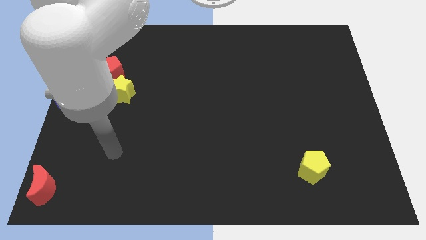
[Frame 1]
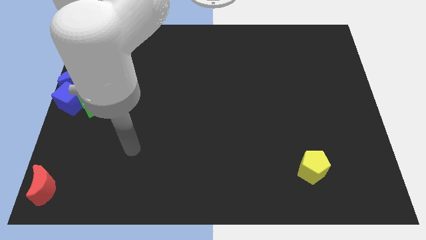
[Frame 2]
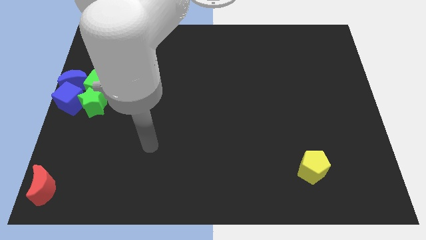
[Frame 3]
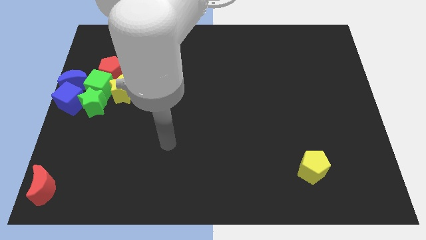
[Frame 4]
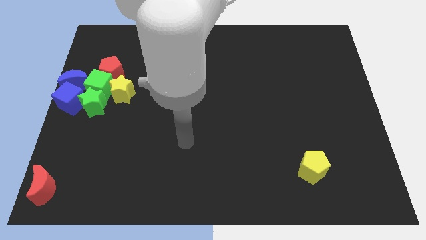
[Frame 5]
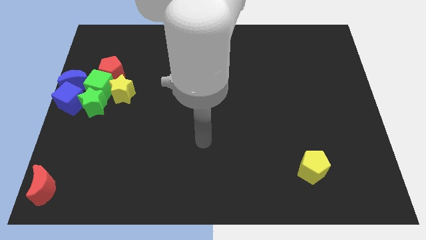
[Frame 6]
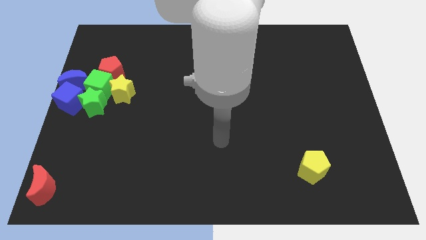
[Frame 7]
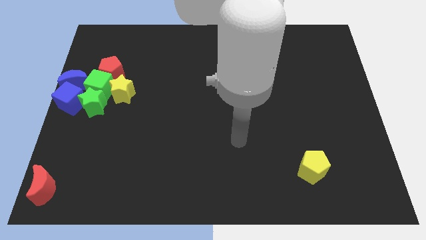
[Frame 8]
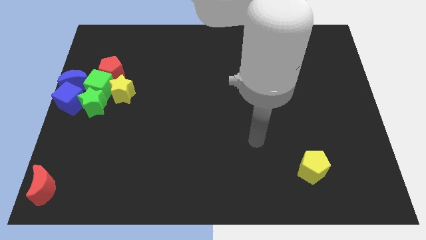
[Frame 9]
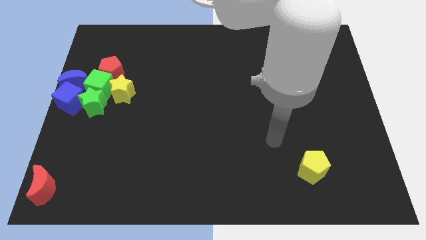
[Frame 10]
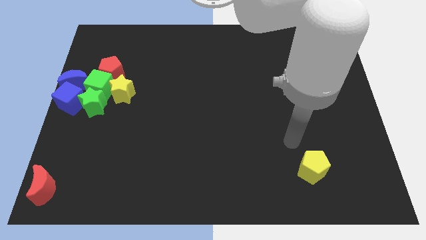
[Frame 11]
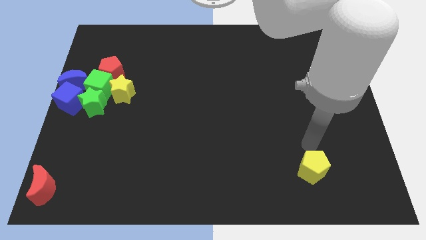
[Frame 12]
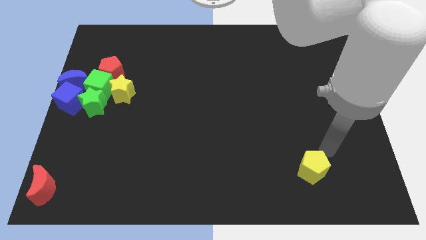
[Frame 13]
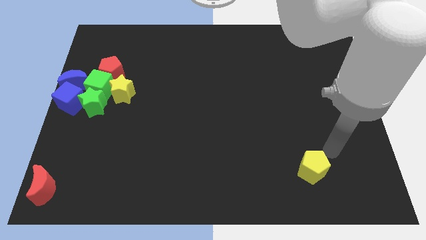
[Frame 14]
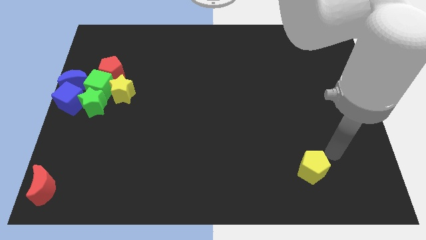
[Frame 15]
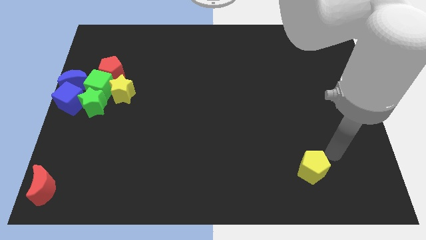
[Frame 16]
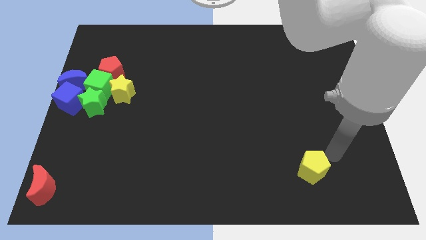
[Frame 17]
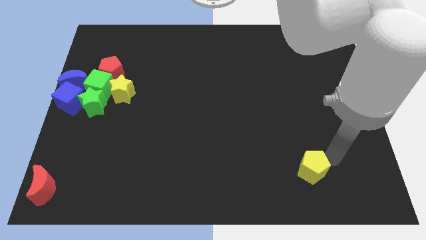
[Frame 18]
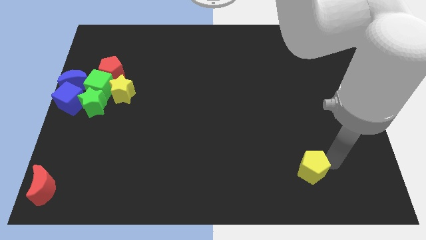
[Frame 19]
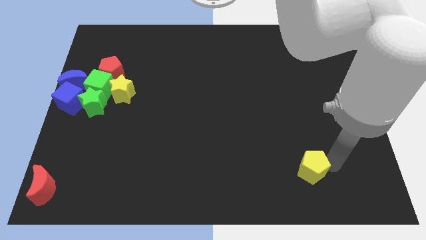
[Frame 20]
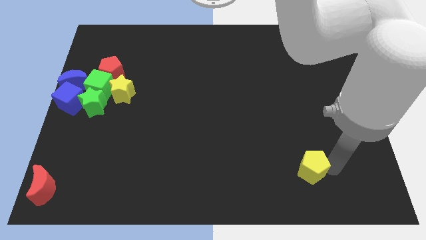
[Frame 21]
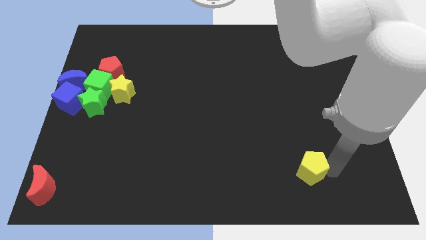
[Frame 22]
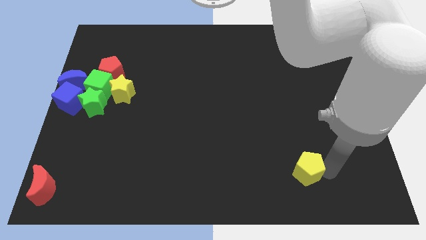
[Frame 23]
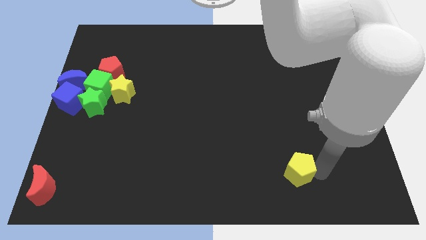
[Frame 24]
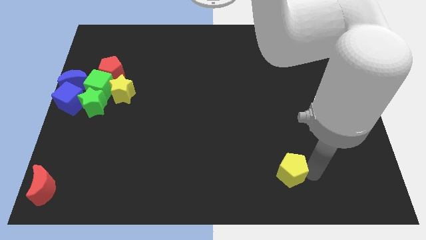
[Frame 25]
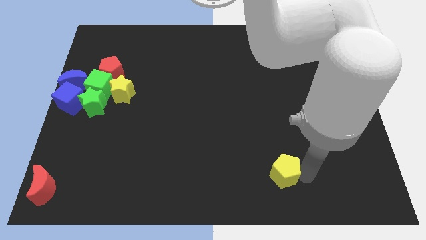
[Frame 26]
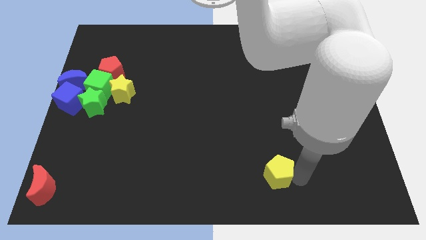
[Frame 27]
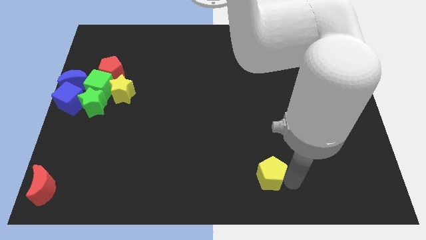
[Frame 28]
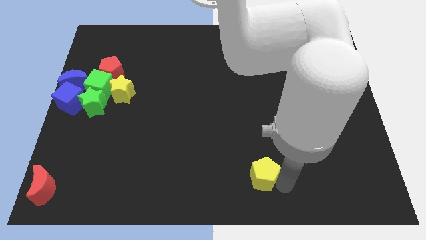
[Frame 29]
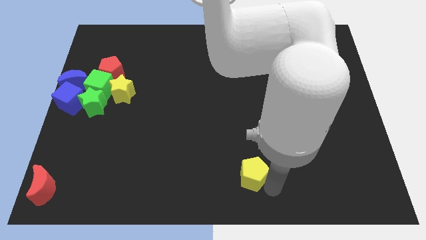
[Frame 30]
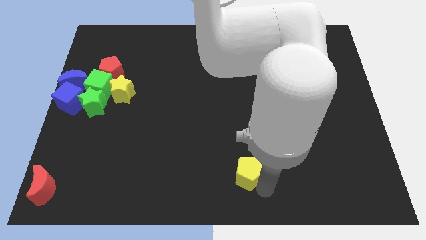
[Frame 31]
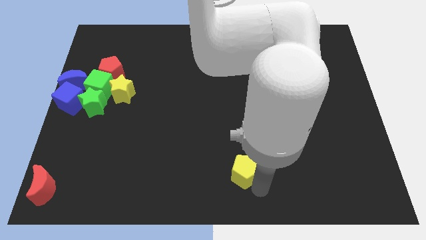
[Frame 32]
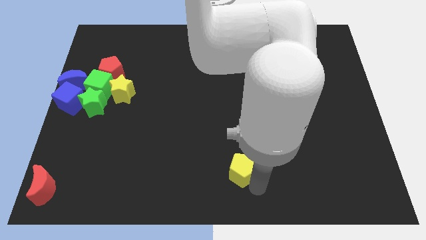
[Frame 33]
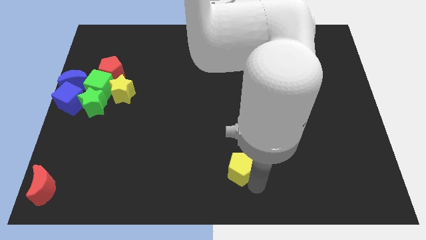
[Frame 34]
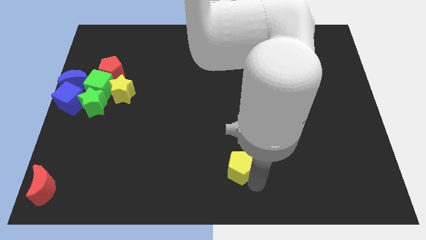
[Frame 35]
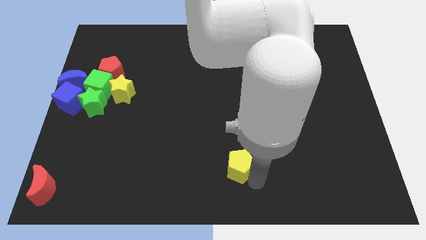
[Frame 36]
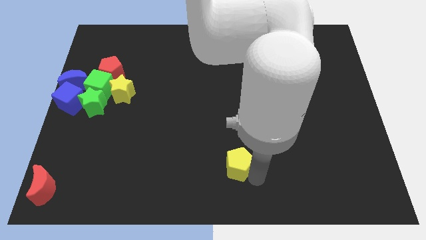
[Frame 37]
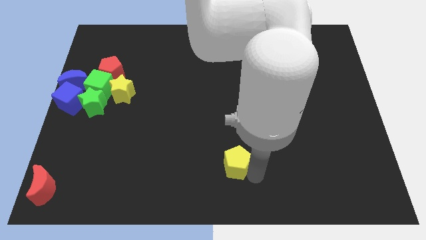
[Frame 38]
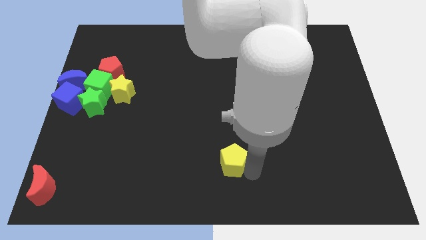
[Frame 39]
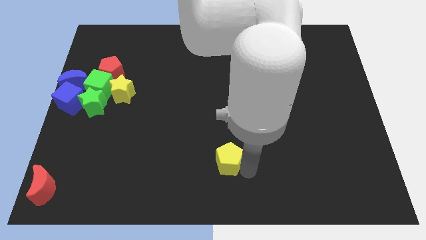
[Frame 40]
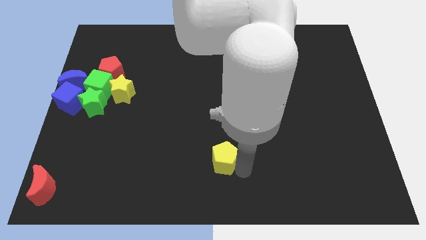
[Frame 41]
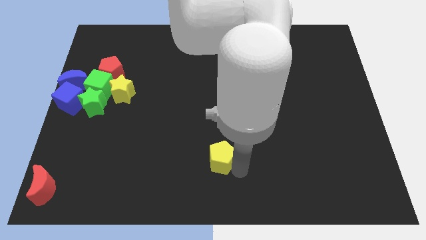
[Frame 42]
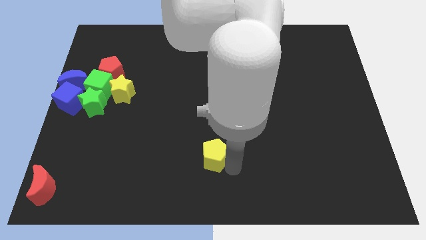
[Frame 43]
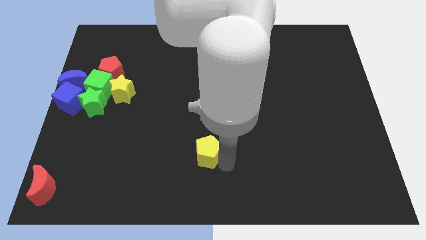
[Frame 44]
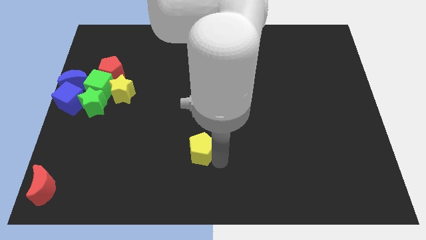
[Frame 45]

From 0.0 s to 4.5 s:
move the yellow pentagon to the bottom center of the board

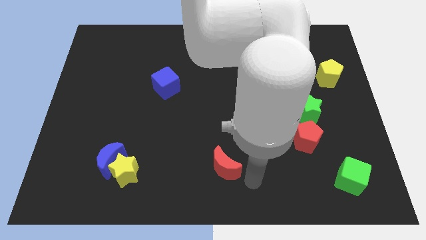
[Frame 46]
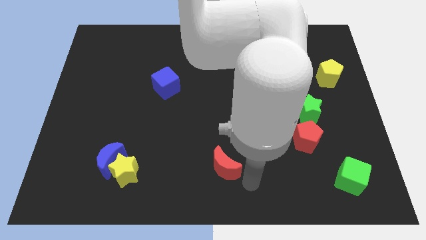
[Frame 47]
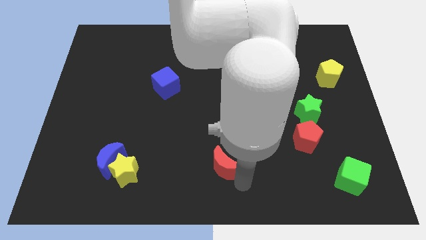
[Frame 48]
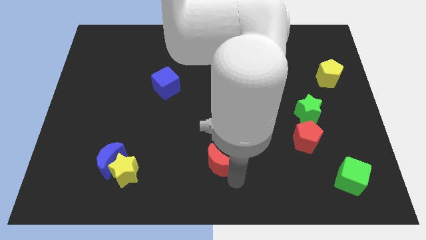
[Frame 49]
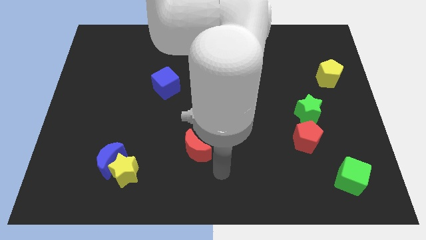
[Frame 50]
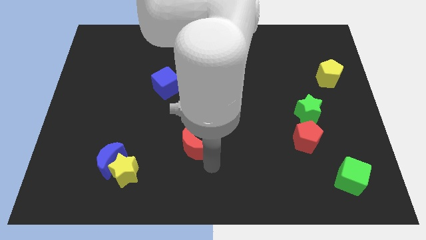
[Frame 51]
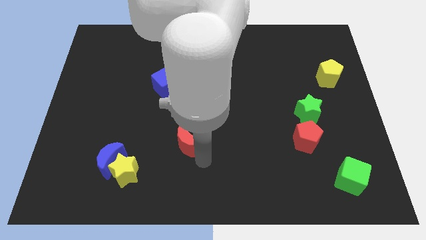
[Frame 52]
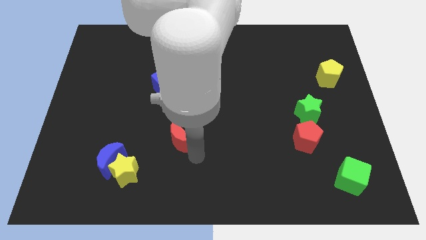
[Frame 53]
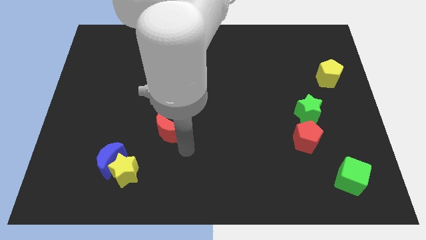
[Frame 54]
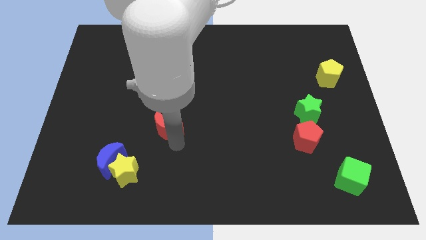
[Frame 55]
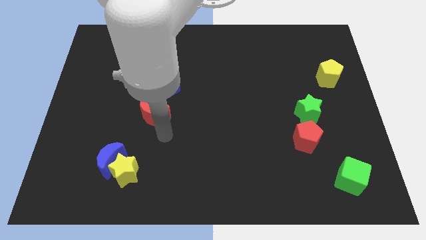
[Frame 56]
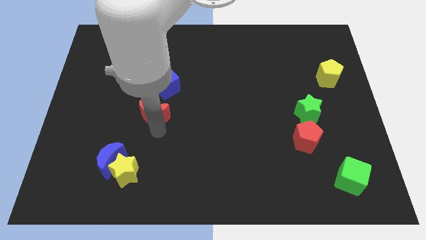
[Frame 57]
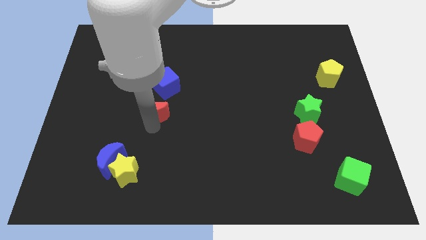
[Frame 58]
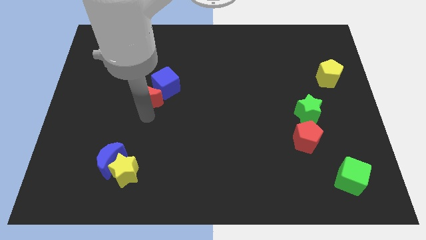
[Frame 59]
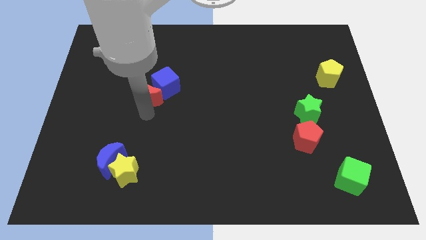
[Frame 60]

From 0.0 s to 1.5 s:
push the red moon into the blue cube

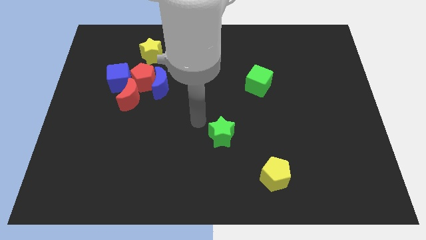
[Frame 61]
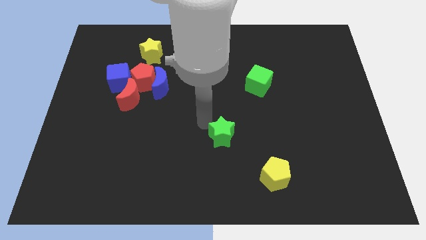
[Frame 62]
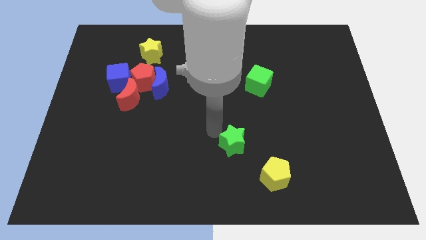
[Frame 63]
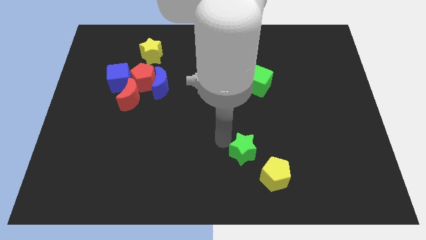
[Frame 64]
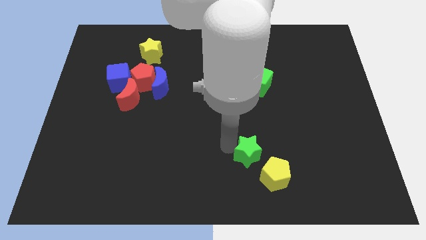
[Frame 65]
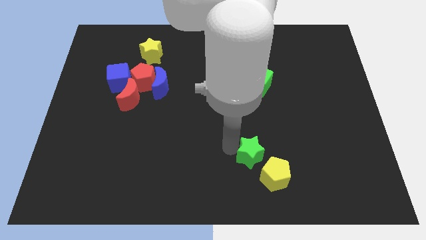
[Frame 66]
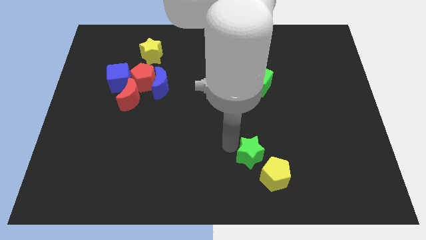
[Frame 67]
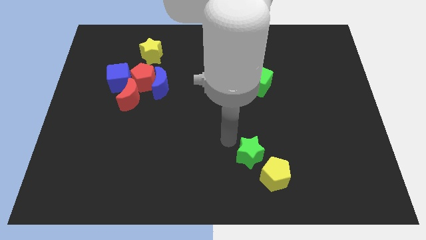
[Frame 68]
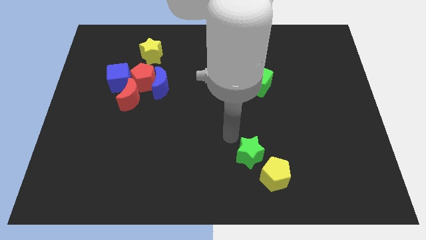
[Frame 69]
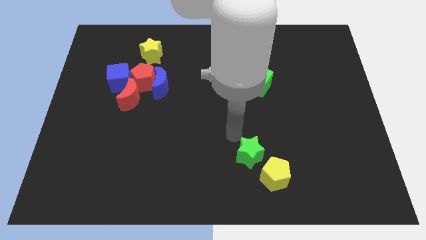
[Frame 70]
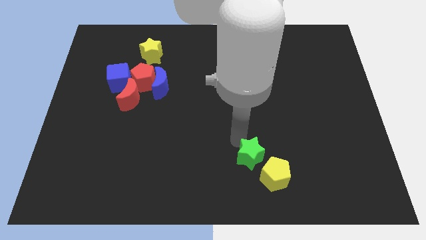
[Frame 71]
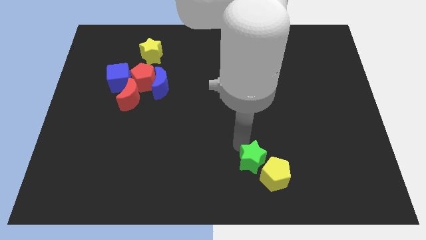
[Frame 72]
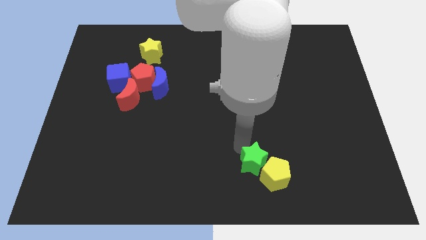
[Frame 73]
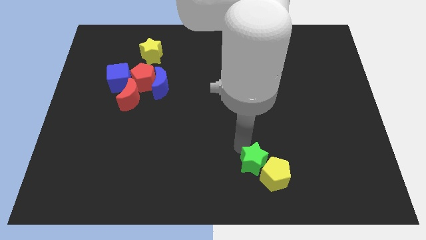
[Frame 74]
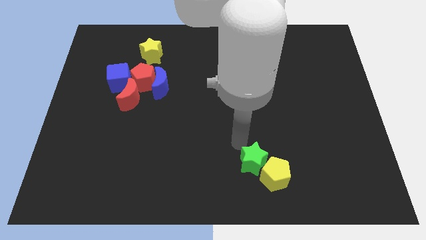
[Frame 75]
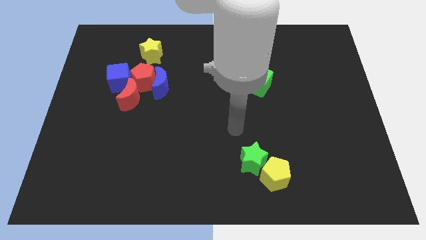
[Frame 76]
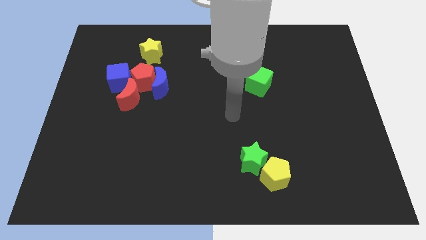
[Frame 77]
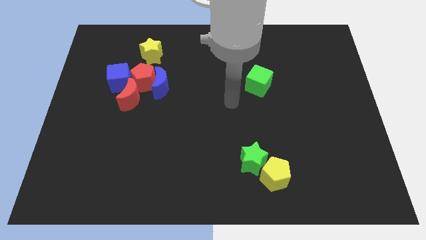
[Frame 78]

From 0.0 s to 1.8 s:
move the green star close to the yellow pentagon

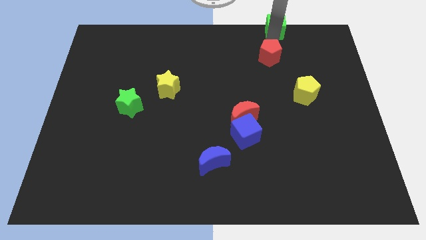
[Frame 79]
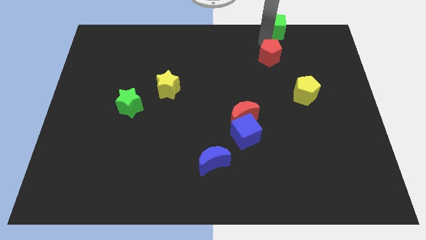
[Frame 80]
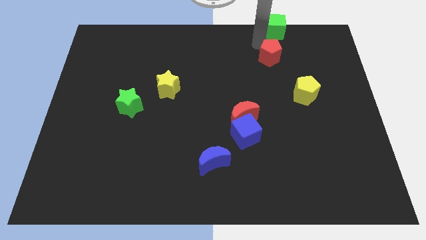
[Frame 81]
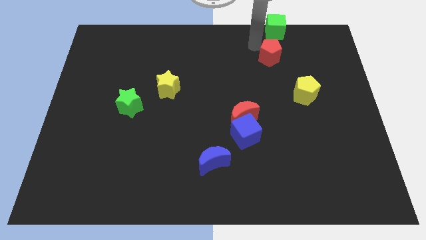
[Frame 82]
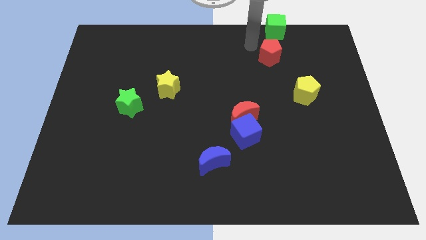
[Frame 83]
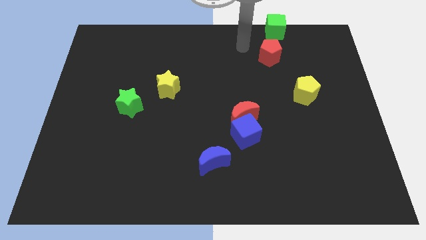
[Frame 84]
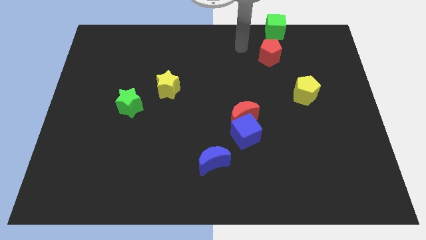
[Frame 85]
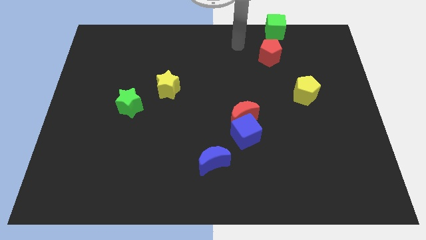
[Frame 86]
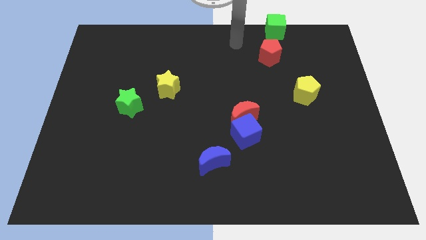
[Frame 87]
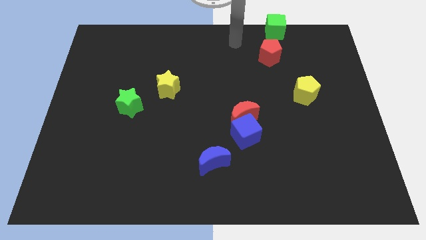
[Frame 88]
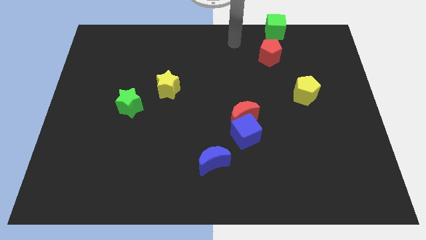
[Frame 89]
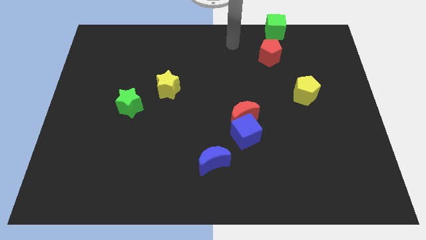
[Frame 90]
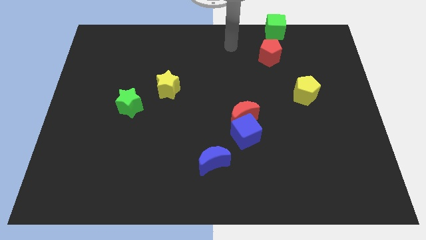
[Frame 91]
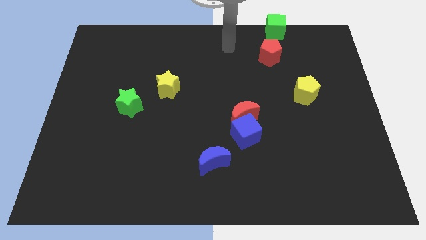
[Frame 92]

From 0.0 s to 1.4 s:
drag the arm away from the green cube
